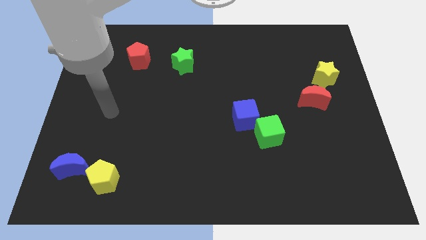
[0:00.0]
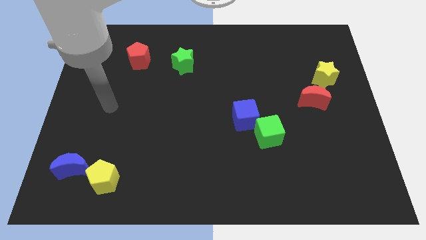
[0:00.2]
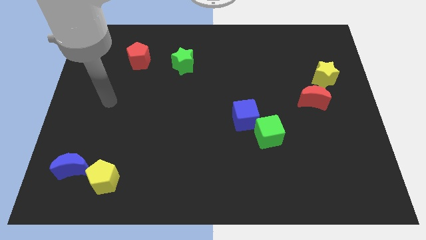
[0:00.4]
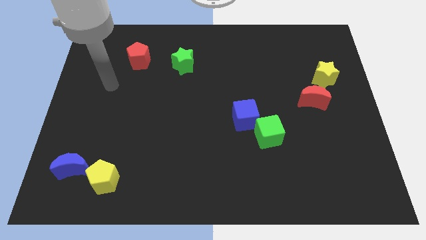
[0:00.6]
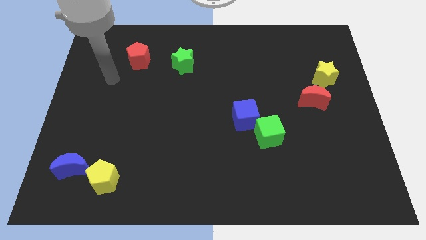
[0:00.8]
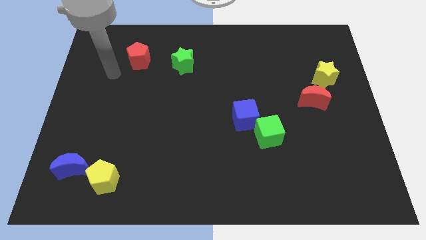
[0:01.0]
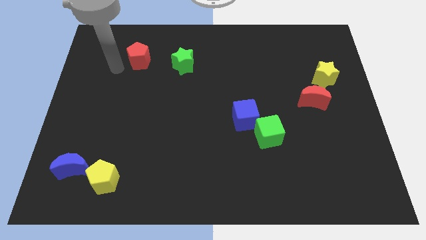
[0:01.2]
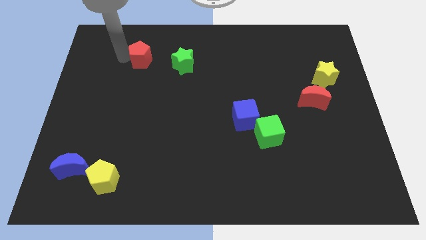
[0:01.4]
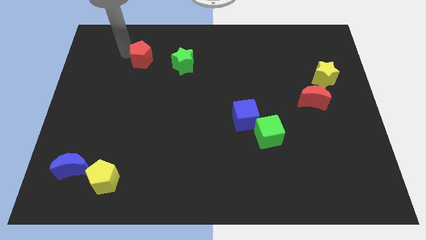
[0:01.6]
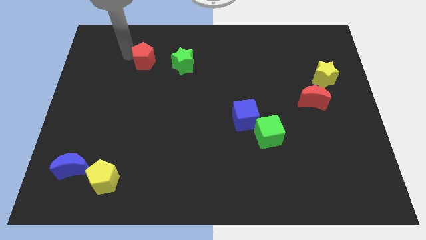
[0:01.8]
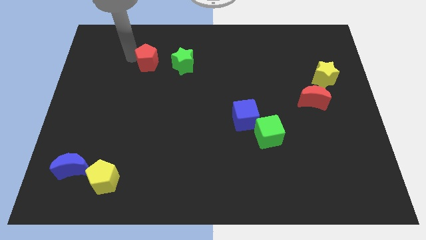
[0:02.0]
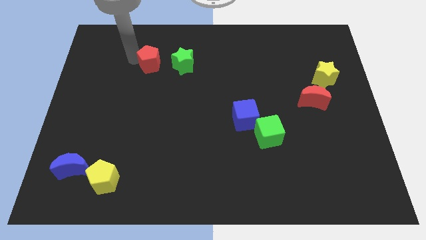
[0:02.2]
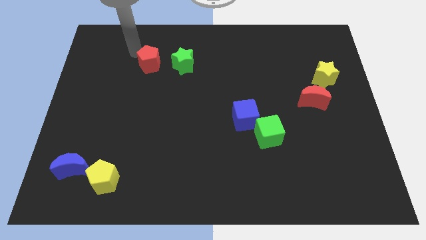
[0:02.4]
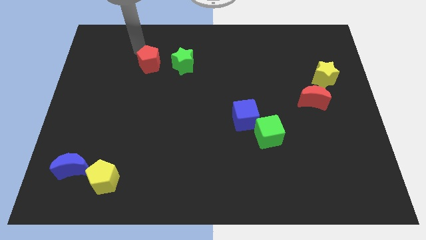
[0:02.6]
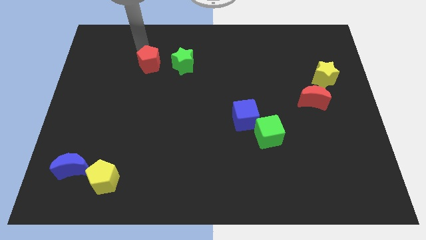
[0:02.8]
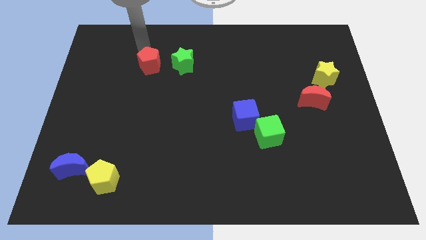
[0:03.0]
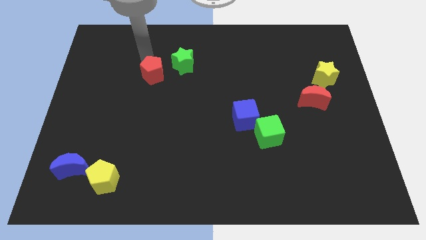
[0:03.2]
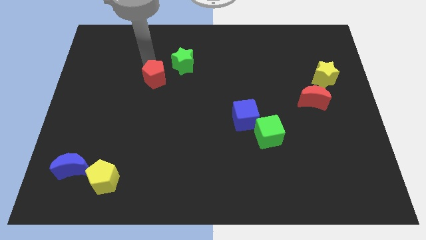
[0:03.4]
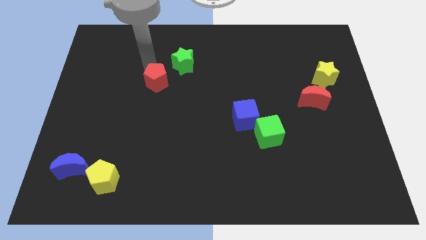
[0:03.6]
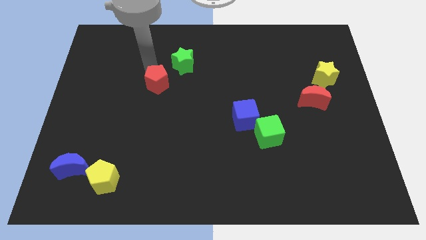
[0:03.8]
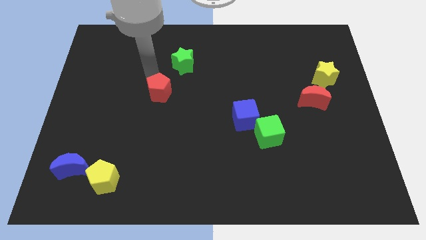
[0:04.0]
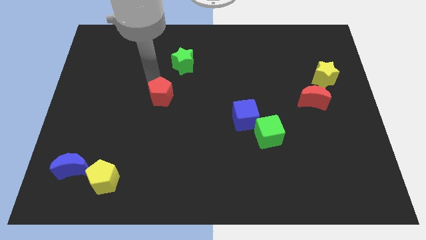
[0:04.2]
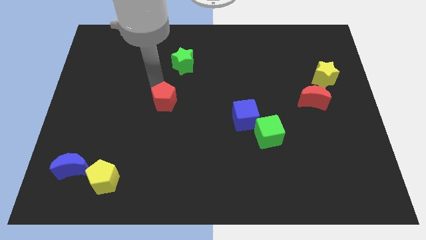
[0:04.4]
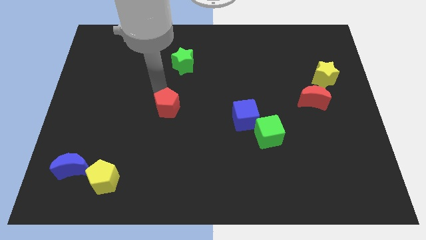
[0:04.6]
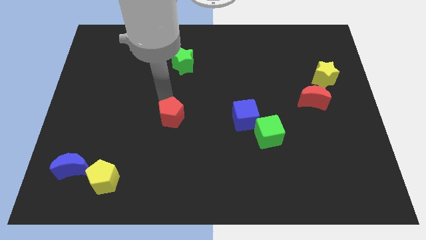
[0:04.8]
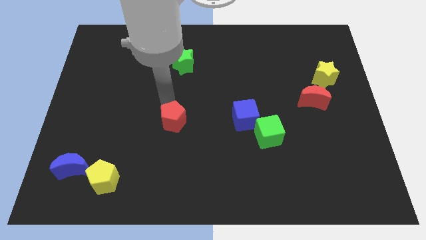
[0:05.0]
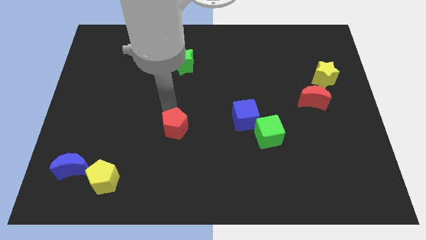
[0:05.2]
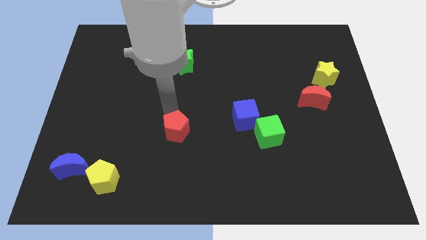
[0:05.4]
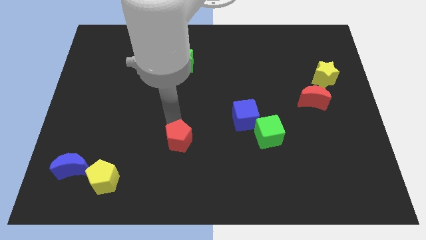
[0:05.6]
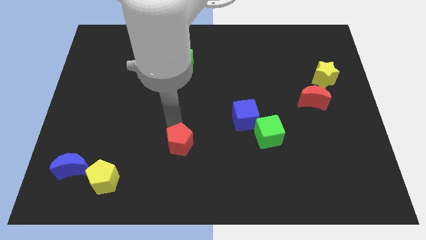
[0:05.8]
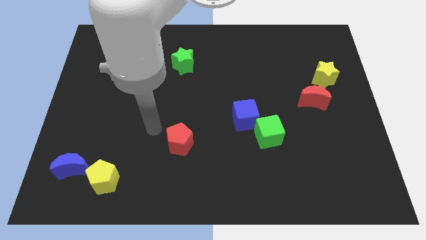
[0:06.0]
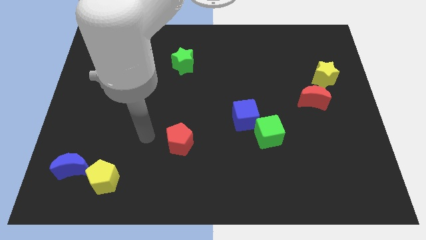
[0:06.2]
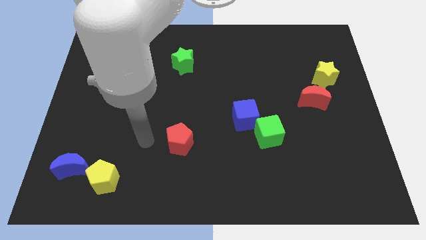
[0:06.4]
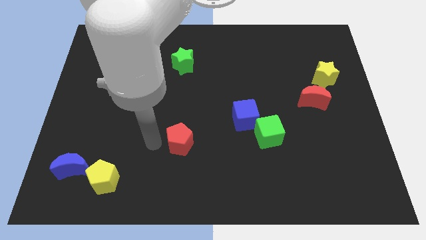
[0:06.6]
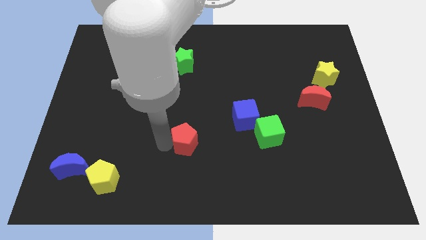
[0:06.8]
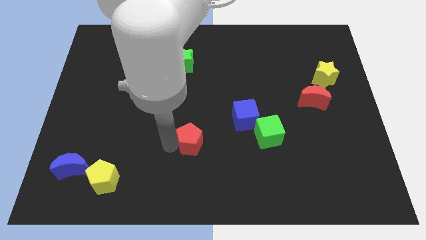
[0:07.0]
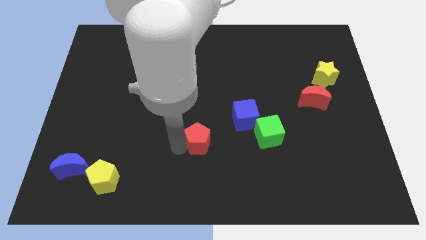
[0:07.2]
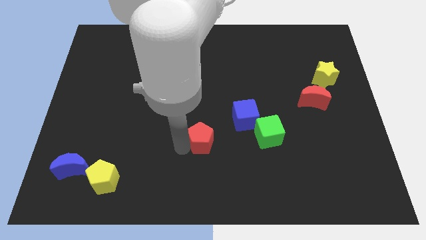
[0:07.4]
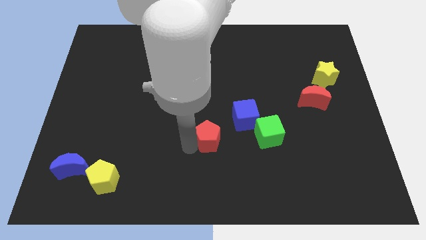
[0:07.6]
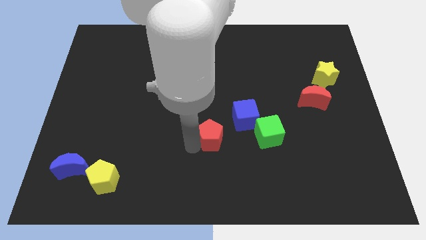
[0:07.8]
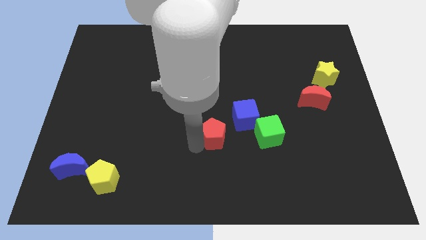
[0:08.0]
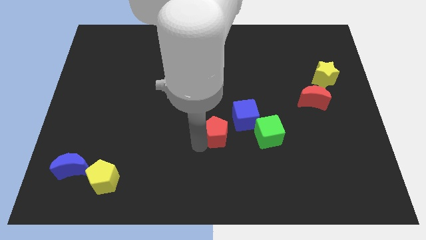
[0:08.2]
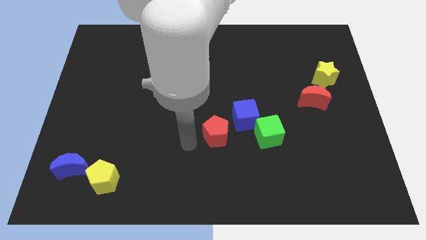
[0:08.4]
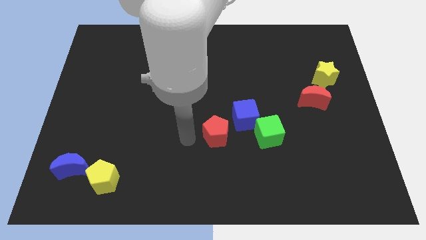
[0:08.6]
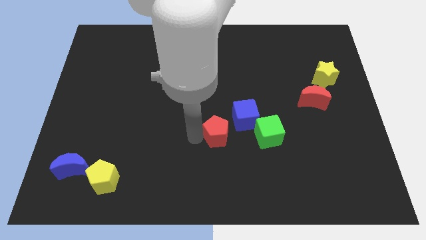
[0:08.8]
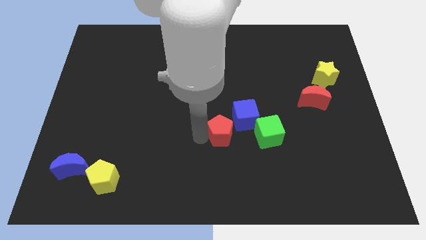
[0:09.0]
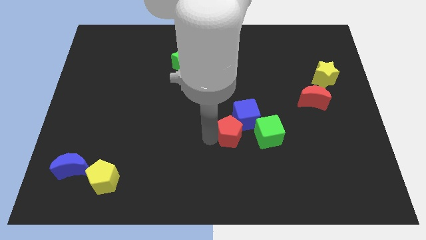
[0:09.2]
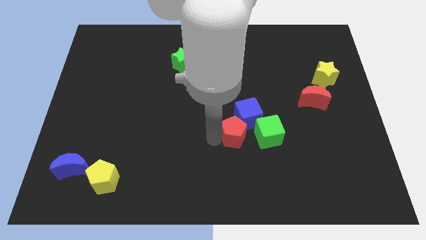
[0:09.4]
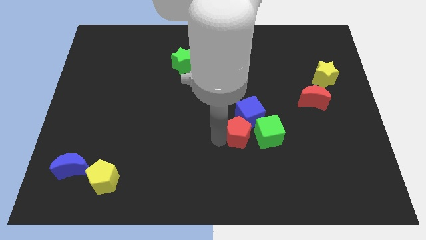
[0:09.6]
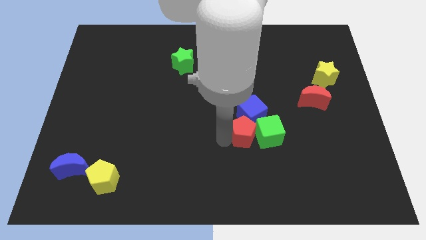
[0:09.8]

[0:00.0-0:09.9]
push the red pentagon close to the green cube

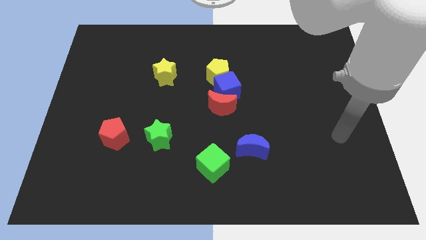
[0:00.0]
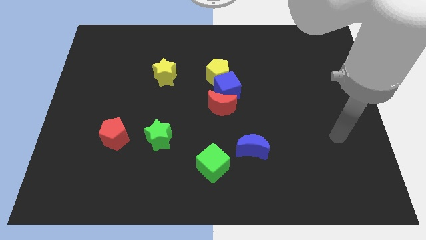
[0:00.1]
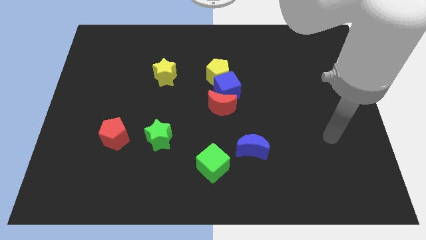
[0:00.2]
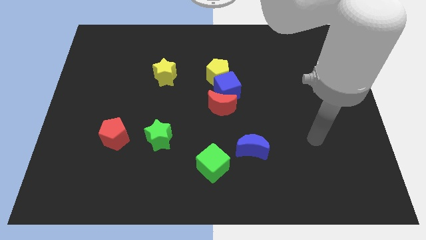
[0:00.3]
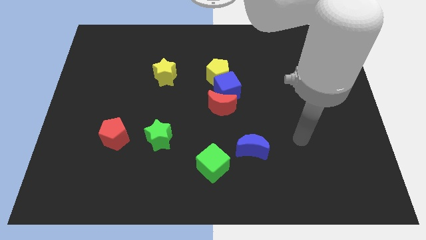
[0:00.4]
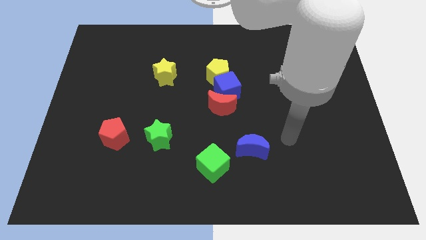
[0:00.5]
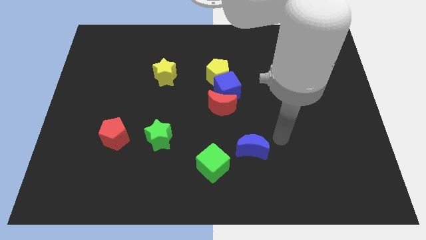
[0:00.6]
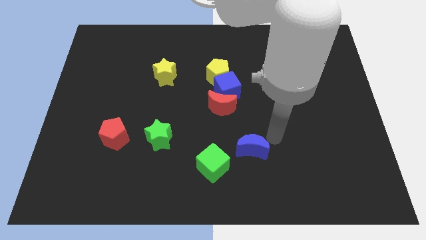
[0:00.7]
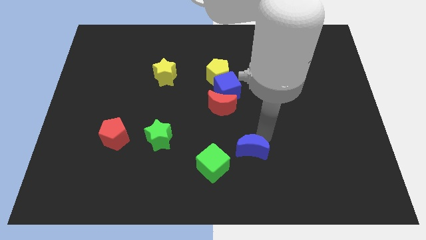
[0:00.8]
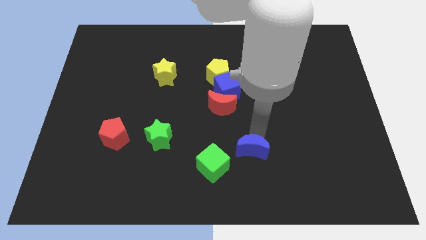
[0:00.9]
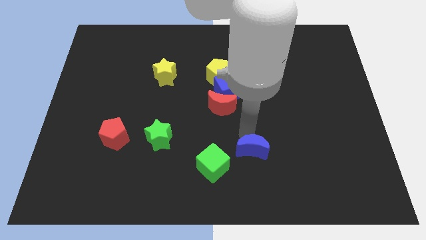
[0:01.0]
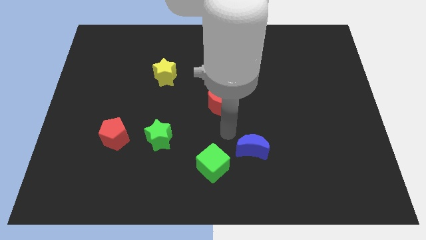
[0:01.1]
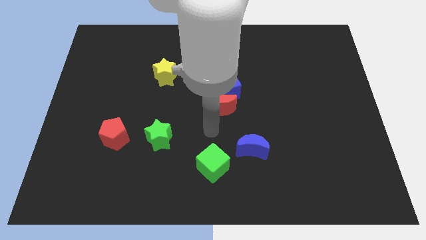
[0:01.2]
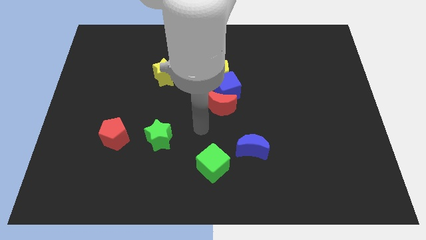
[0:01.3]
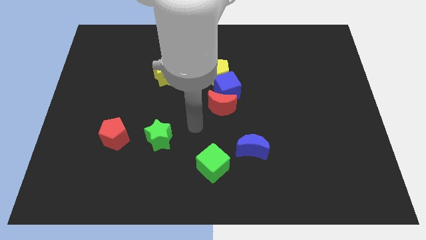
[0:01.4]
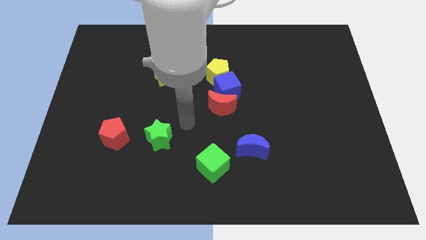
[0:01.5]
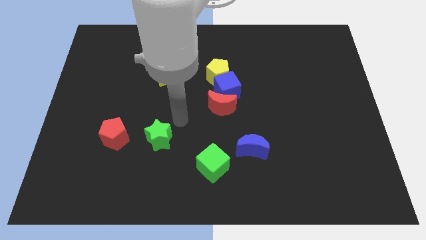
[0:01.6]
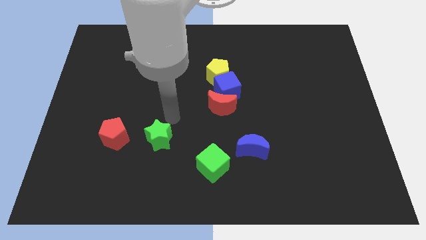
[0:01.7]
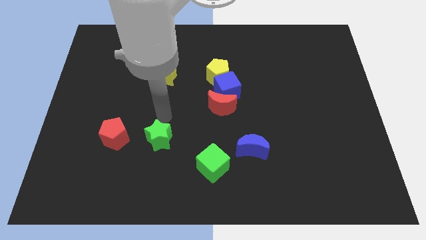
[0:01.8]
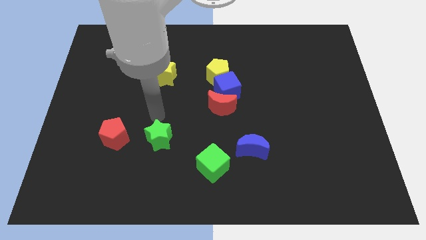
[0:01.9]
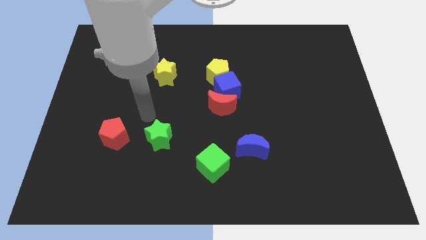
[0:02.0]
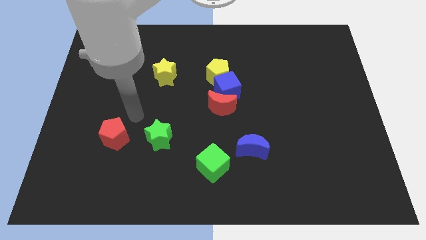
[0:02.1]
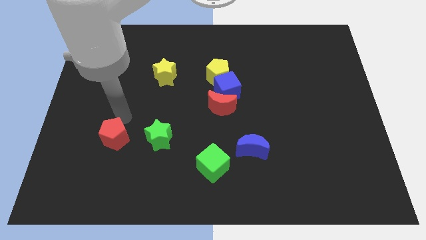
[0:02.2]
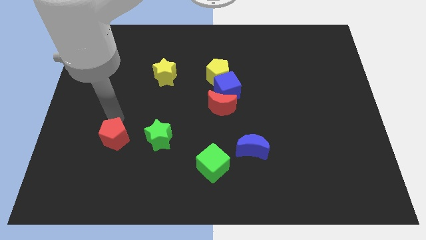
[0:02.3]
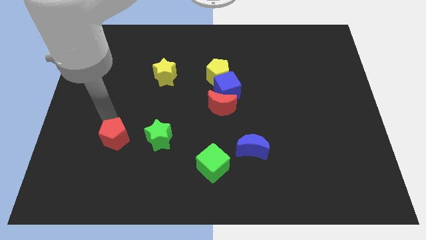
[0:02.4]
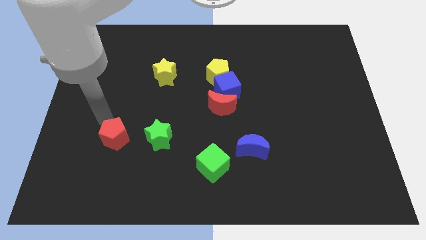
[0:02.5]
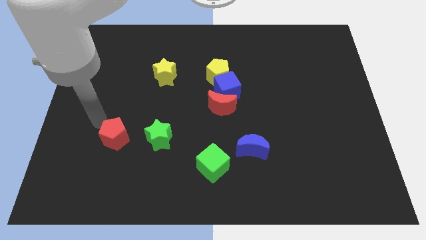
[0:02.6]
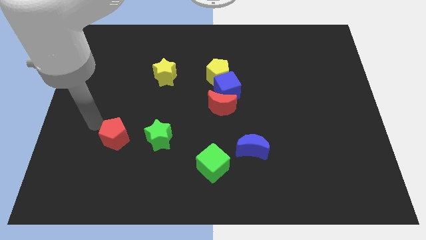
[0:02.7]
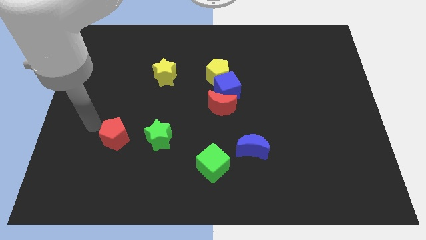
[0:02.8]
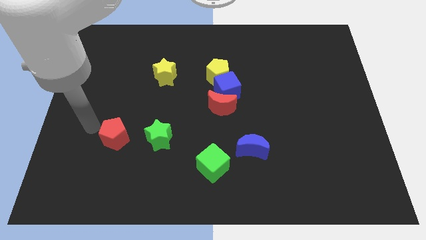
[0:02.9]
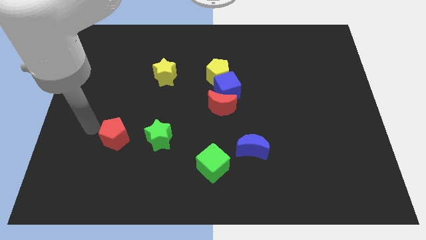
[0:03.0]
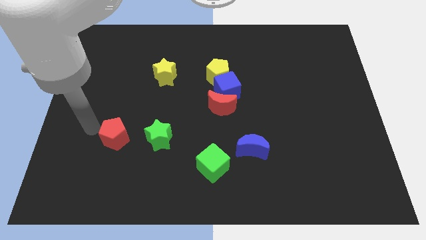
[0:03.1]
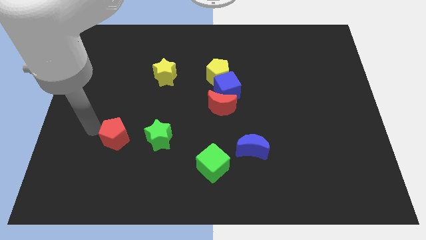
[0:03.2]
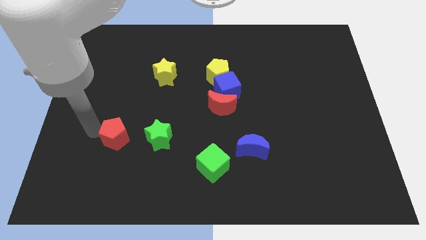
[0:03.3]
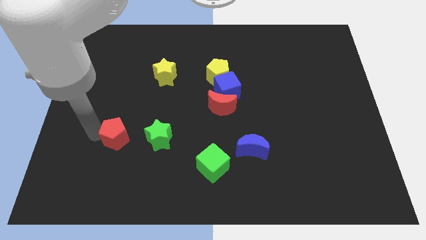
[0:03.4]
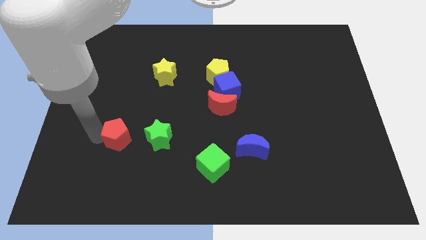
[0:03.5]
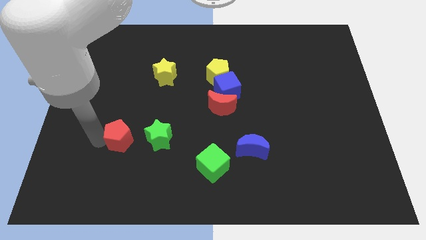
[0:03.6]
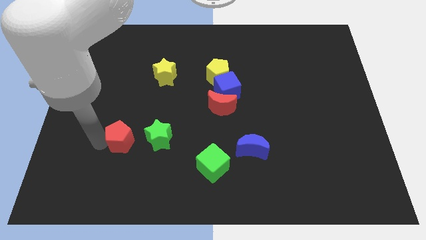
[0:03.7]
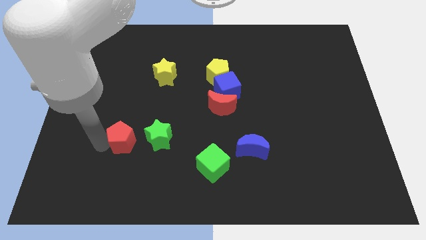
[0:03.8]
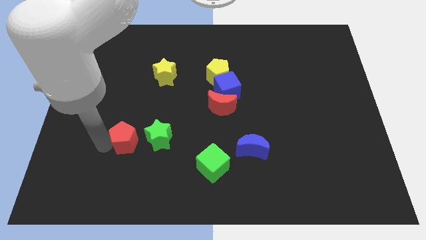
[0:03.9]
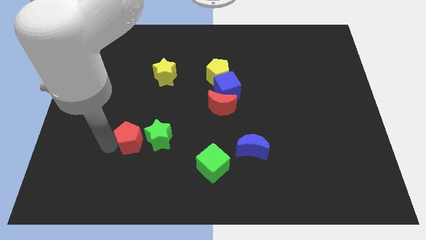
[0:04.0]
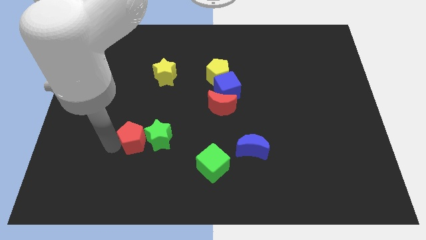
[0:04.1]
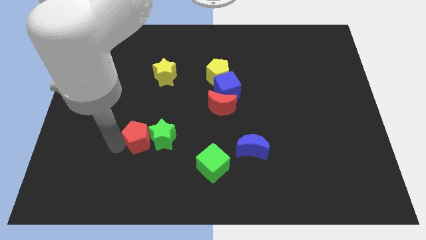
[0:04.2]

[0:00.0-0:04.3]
slide the red pentagon next to the green star
